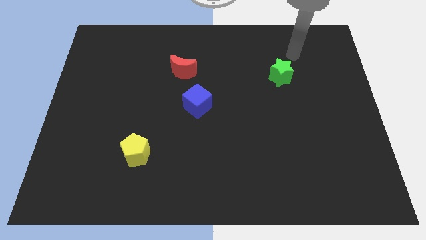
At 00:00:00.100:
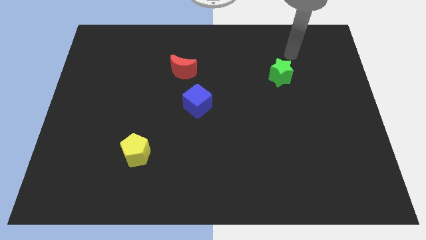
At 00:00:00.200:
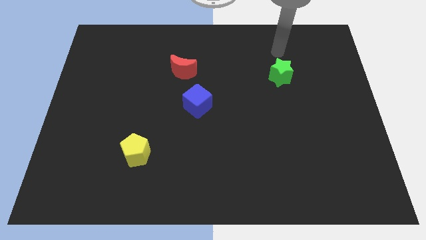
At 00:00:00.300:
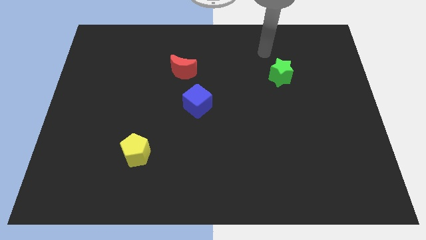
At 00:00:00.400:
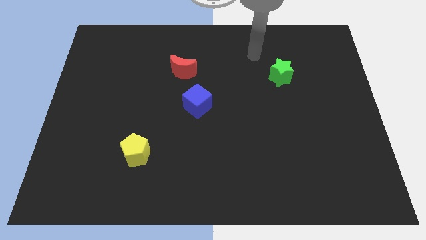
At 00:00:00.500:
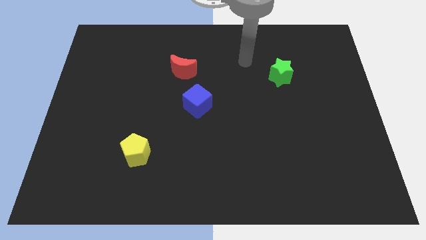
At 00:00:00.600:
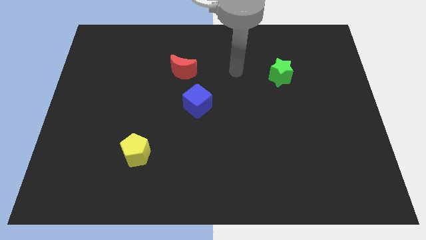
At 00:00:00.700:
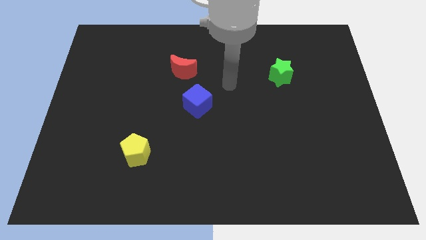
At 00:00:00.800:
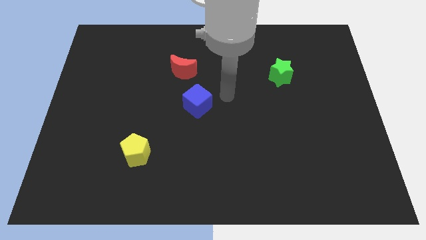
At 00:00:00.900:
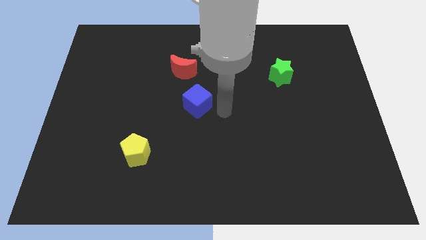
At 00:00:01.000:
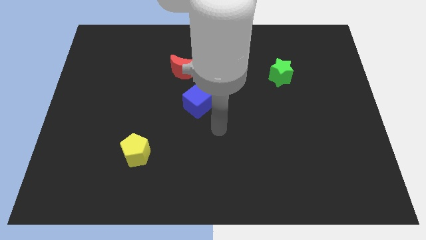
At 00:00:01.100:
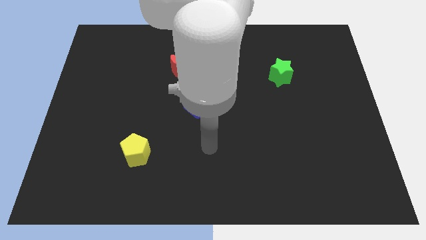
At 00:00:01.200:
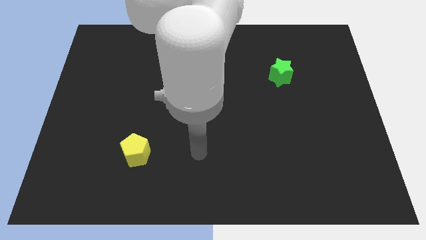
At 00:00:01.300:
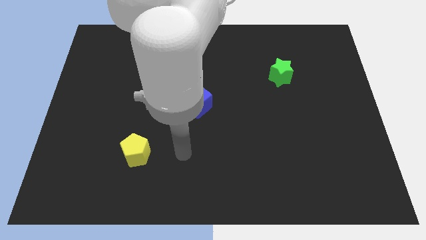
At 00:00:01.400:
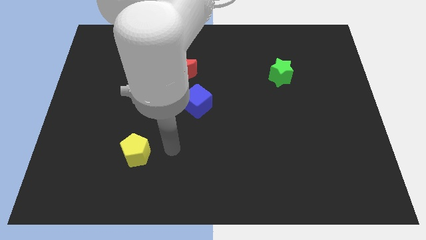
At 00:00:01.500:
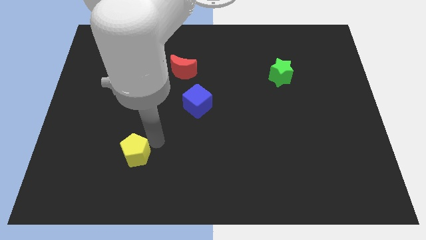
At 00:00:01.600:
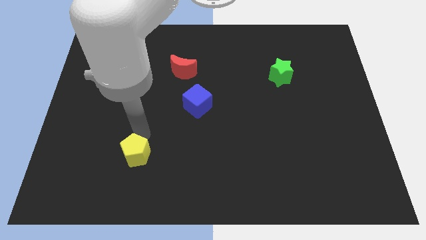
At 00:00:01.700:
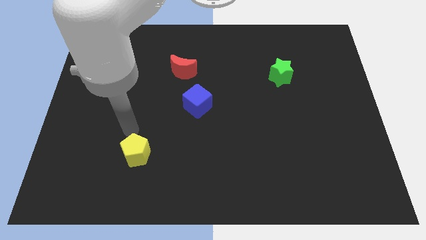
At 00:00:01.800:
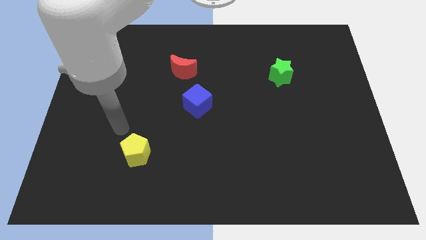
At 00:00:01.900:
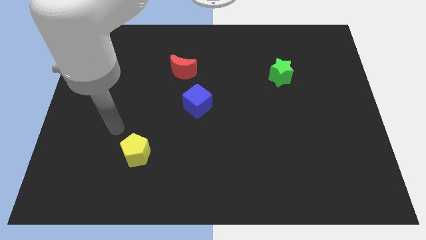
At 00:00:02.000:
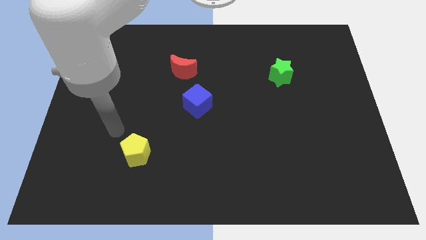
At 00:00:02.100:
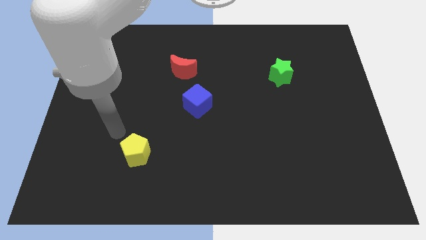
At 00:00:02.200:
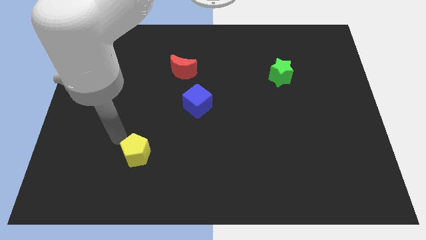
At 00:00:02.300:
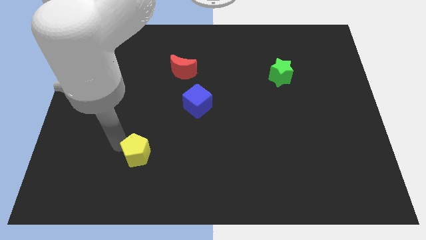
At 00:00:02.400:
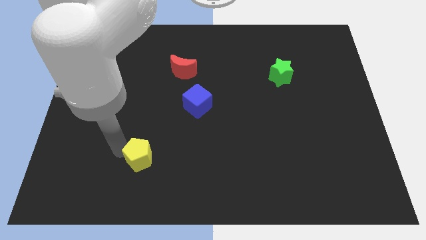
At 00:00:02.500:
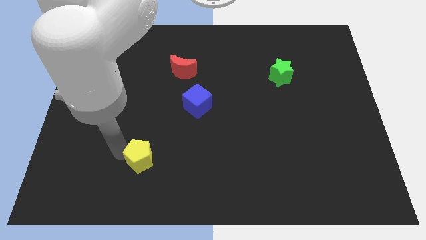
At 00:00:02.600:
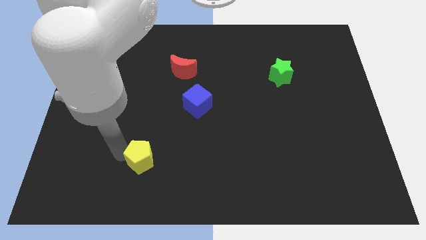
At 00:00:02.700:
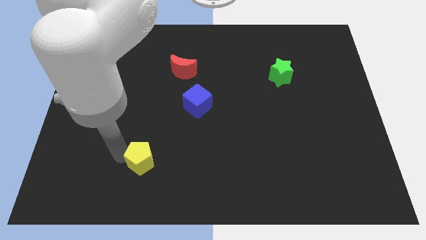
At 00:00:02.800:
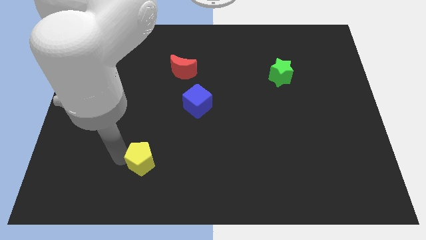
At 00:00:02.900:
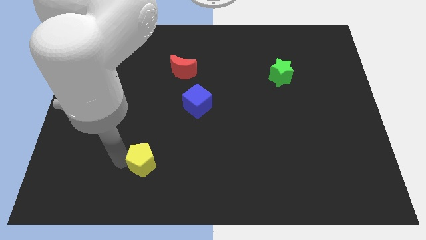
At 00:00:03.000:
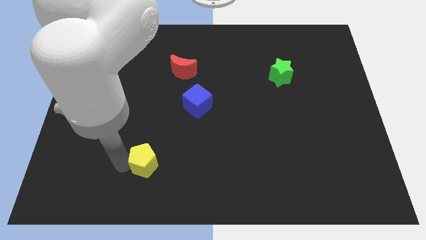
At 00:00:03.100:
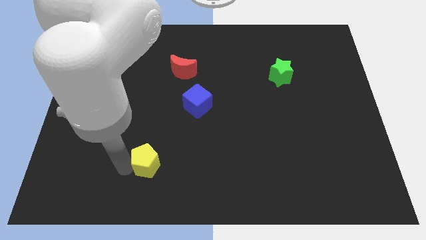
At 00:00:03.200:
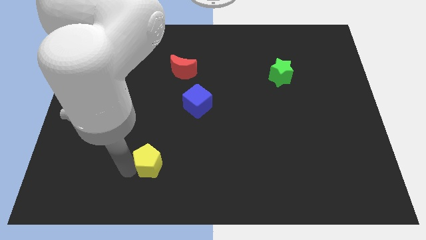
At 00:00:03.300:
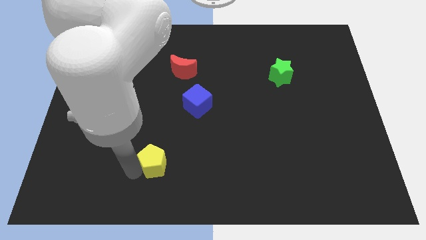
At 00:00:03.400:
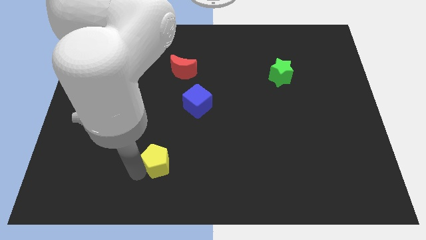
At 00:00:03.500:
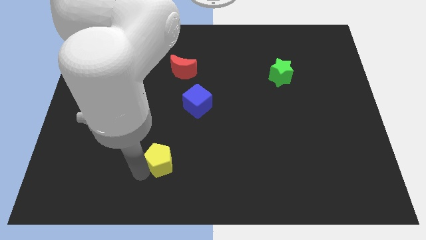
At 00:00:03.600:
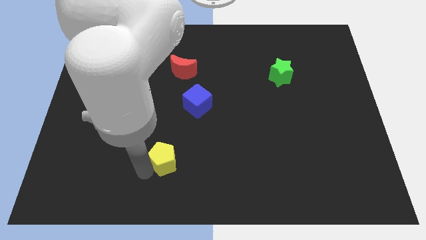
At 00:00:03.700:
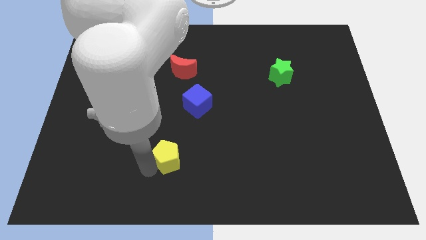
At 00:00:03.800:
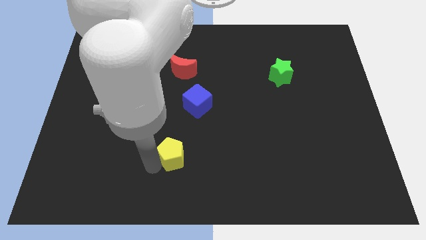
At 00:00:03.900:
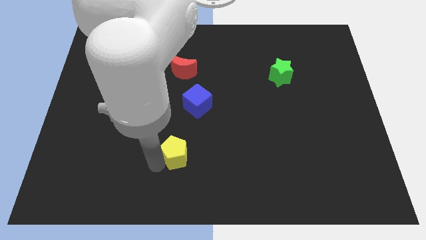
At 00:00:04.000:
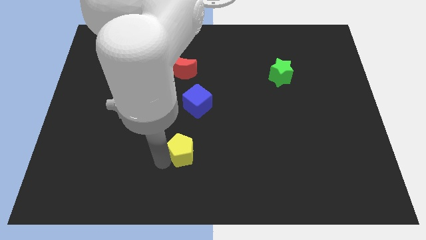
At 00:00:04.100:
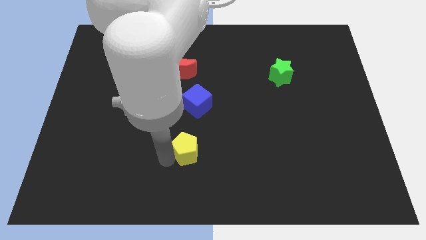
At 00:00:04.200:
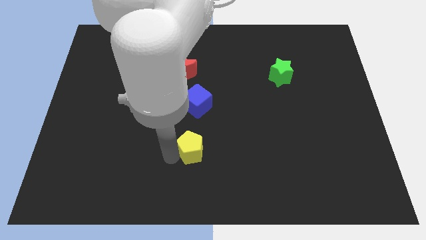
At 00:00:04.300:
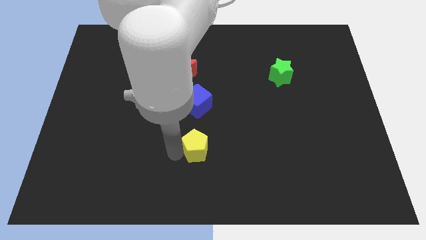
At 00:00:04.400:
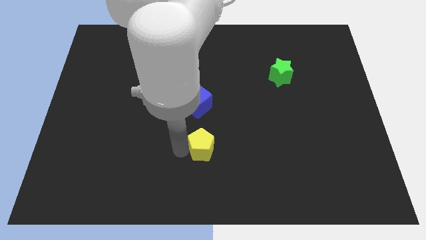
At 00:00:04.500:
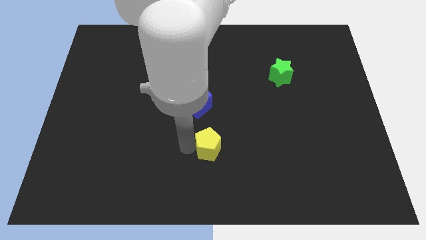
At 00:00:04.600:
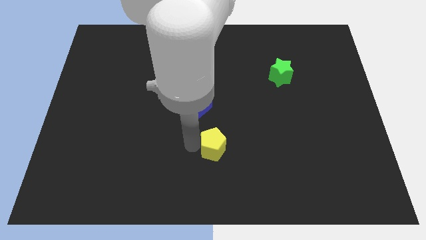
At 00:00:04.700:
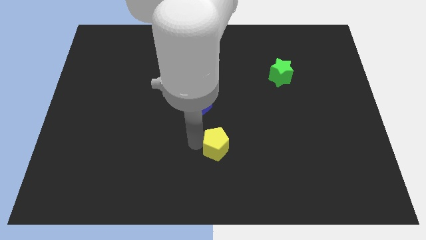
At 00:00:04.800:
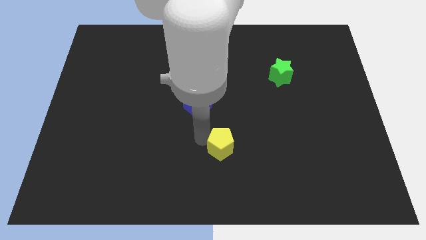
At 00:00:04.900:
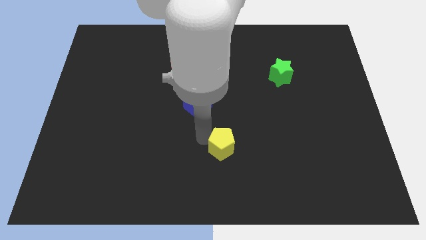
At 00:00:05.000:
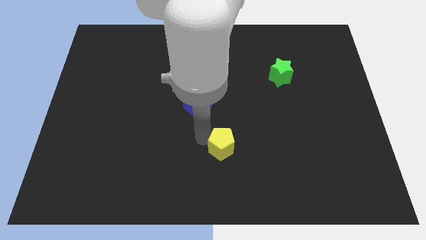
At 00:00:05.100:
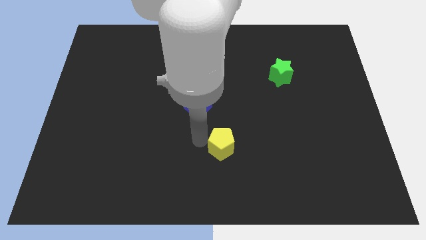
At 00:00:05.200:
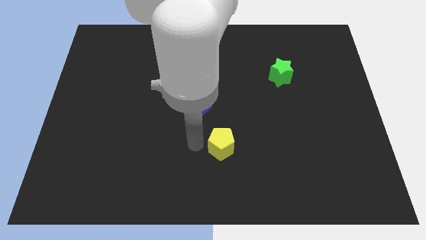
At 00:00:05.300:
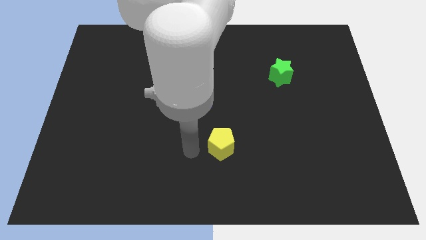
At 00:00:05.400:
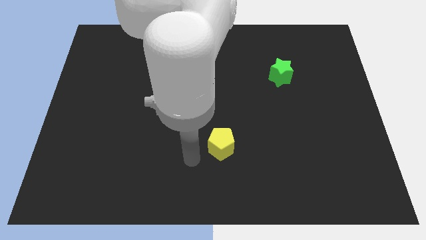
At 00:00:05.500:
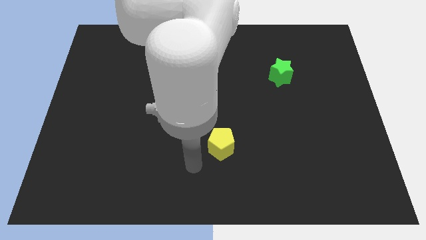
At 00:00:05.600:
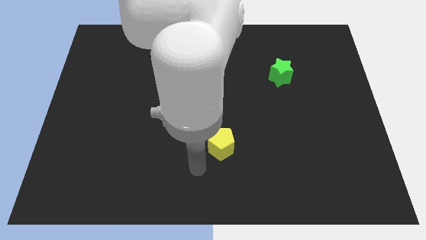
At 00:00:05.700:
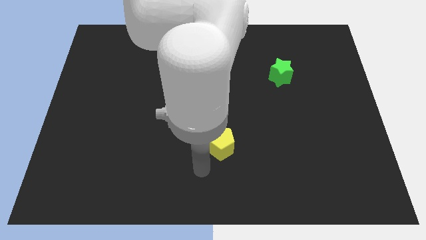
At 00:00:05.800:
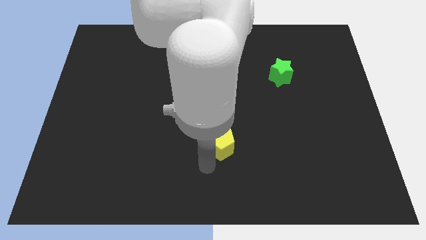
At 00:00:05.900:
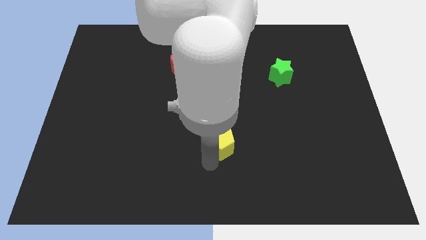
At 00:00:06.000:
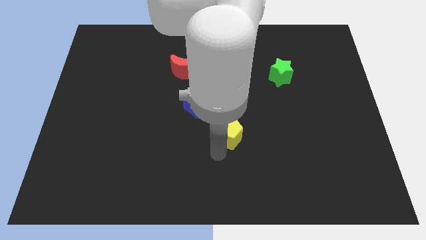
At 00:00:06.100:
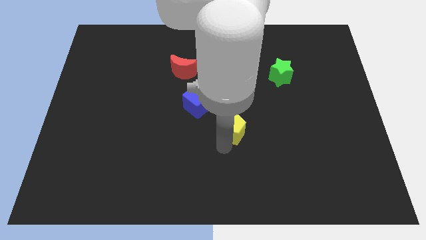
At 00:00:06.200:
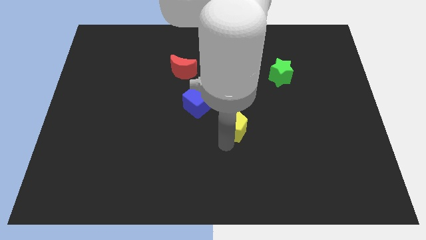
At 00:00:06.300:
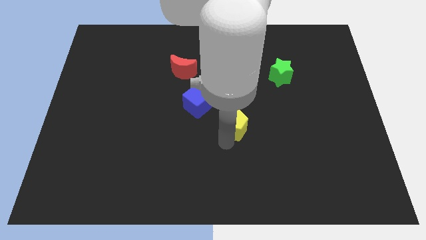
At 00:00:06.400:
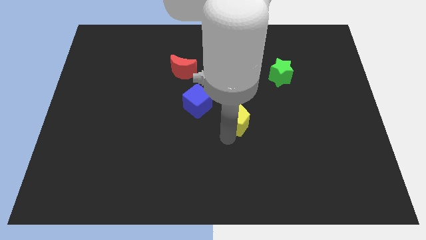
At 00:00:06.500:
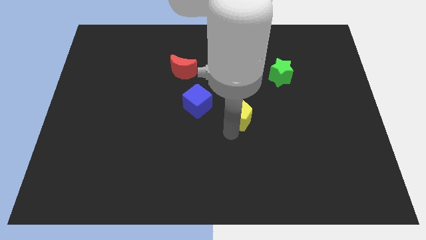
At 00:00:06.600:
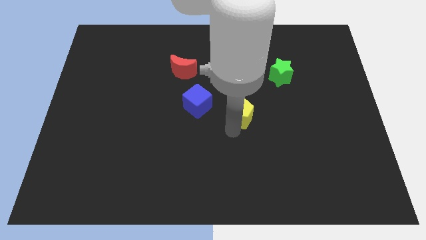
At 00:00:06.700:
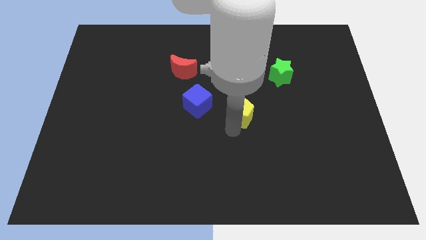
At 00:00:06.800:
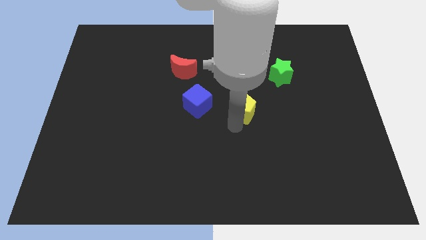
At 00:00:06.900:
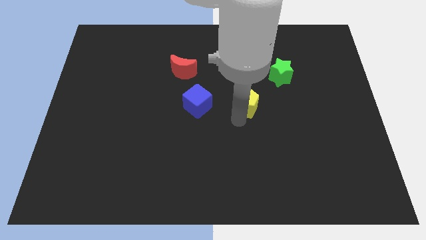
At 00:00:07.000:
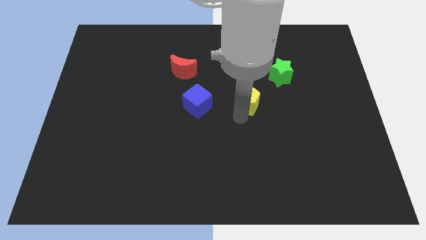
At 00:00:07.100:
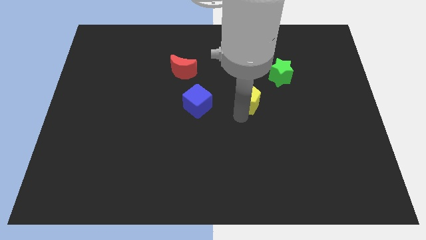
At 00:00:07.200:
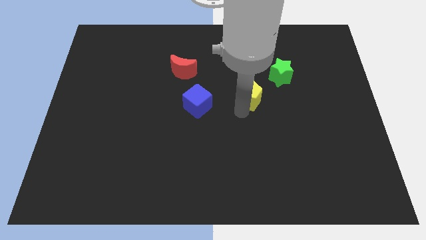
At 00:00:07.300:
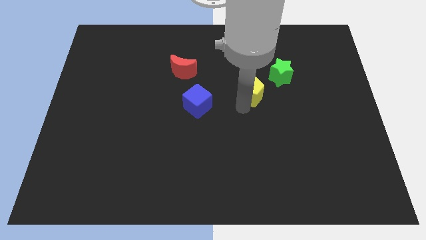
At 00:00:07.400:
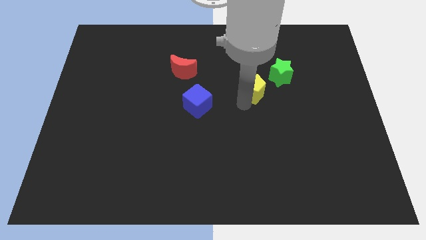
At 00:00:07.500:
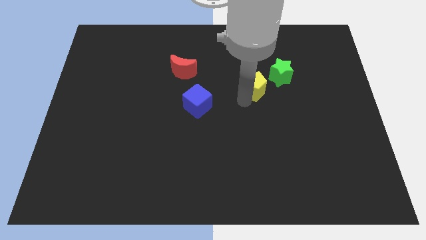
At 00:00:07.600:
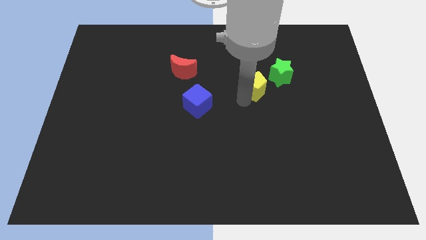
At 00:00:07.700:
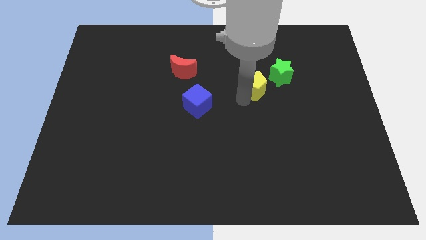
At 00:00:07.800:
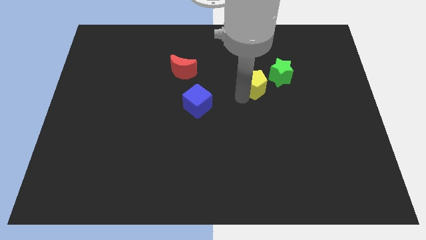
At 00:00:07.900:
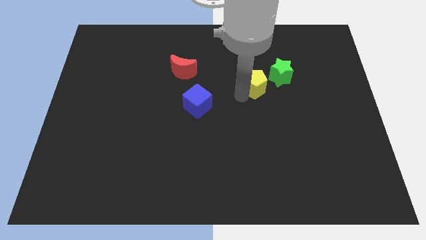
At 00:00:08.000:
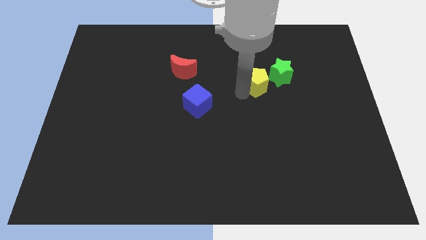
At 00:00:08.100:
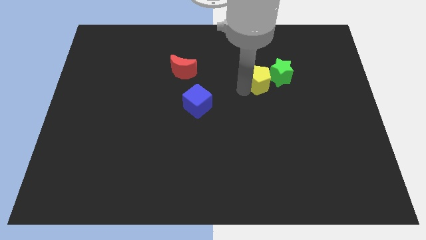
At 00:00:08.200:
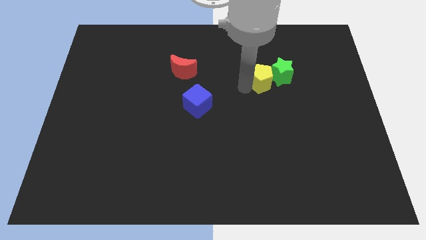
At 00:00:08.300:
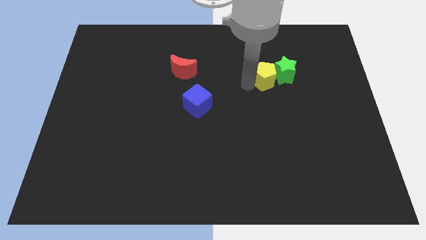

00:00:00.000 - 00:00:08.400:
push the pentagon to the green star
